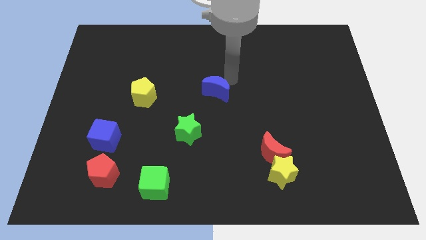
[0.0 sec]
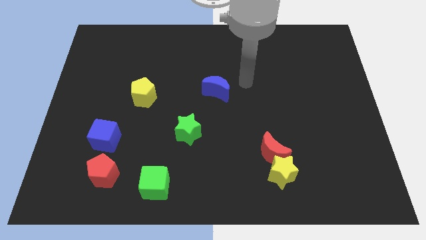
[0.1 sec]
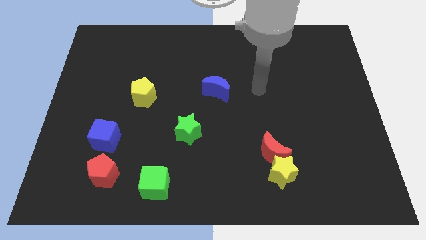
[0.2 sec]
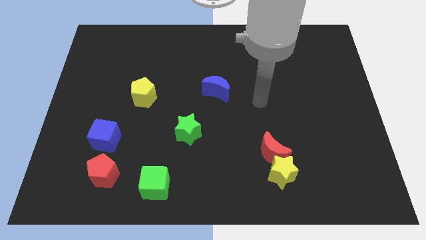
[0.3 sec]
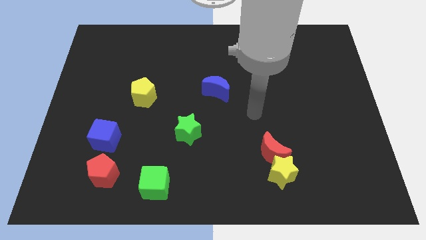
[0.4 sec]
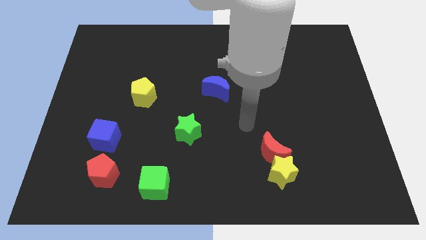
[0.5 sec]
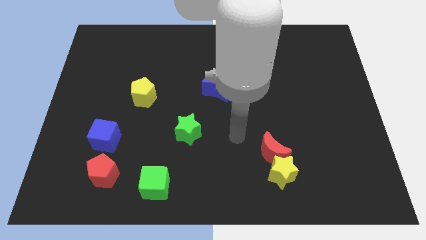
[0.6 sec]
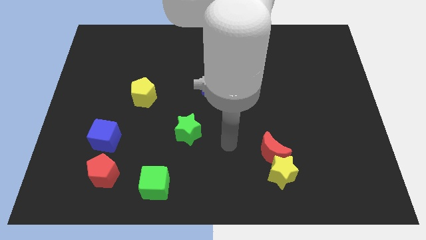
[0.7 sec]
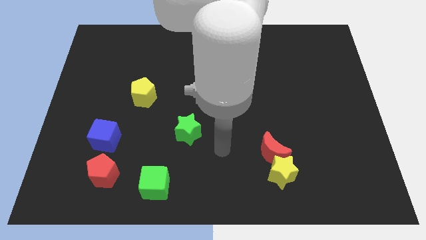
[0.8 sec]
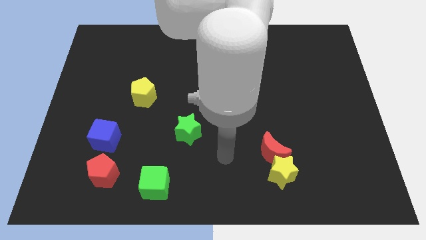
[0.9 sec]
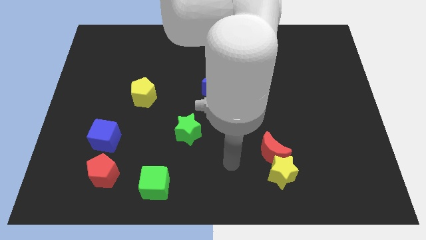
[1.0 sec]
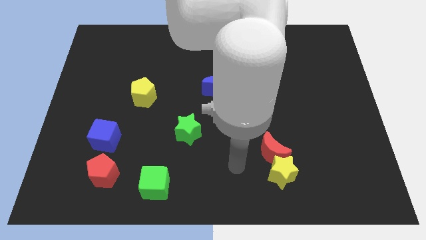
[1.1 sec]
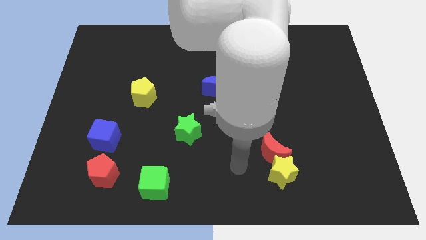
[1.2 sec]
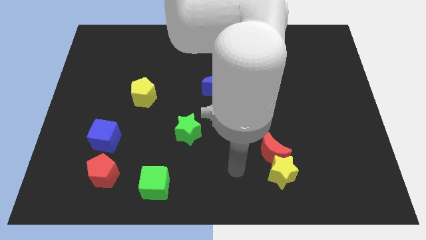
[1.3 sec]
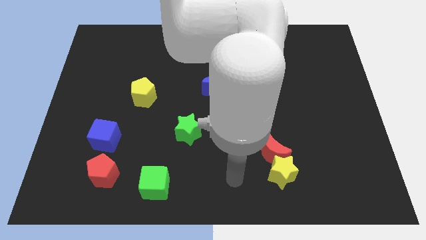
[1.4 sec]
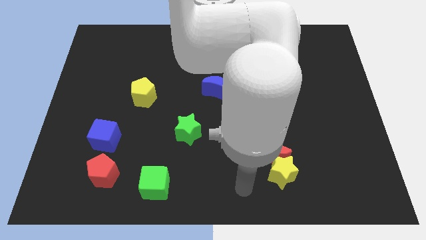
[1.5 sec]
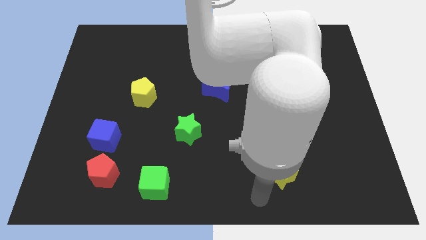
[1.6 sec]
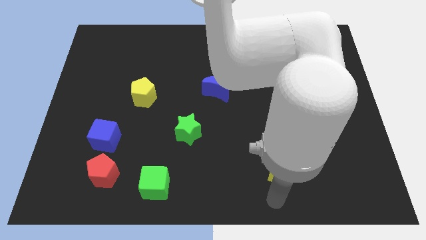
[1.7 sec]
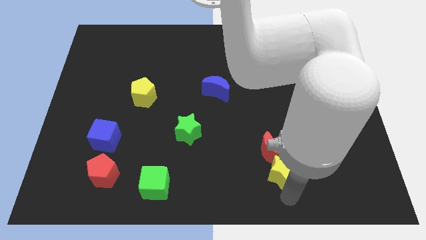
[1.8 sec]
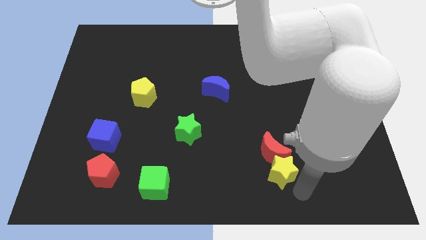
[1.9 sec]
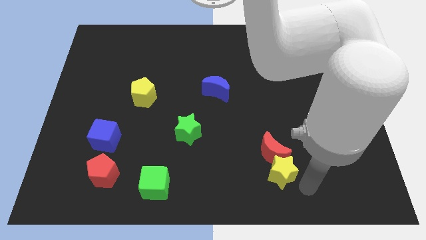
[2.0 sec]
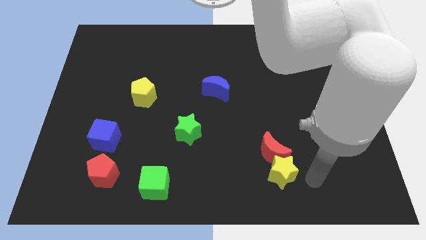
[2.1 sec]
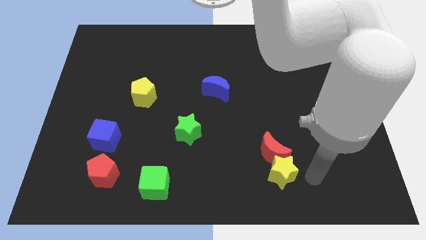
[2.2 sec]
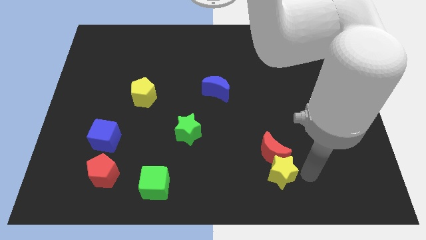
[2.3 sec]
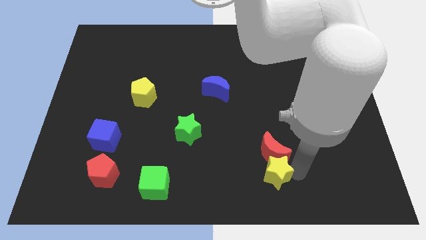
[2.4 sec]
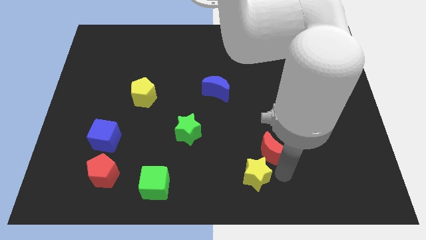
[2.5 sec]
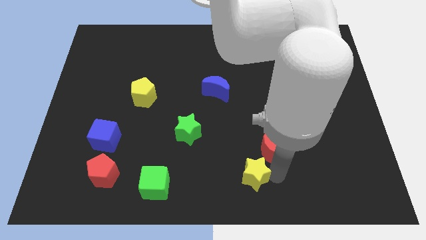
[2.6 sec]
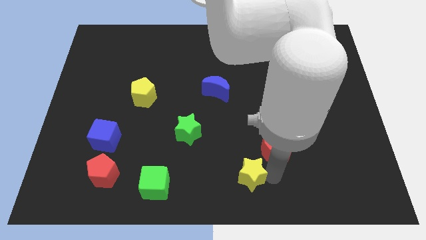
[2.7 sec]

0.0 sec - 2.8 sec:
slide the yellow star to the left slightly

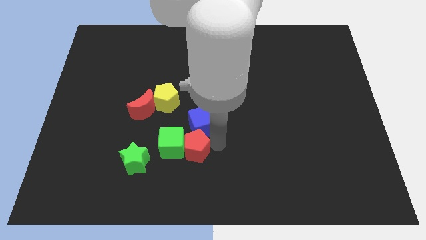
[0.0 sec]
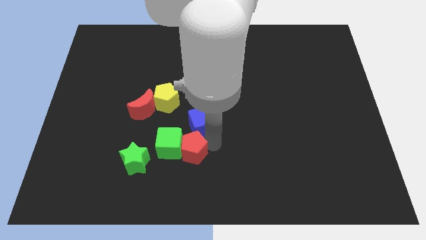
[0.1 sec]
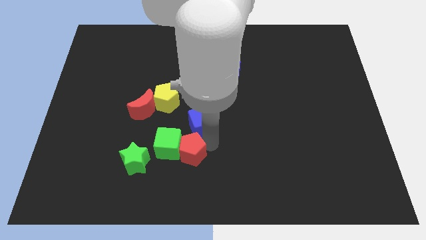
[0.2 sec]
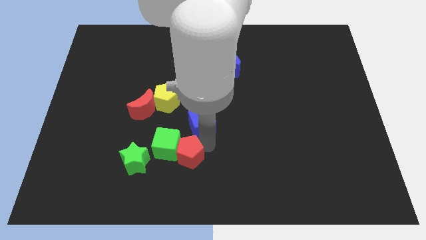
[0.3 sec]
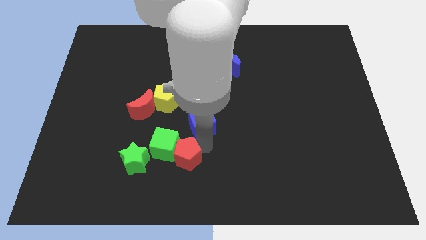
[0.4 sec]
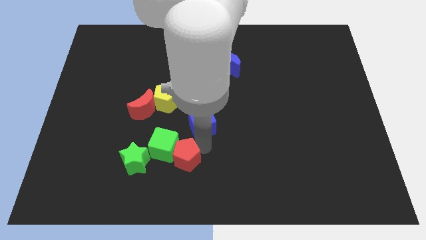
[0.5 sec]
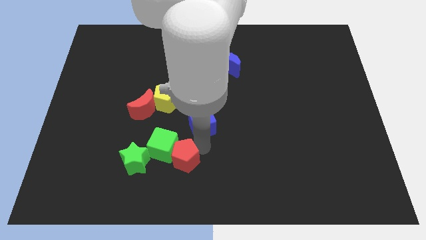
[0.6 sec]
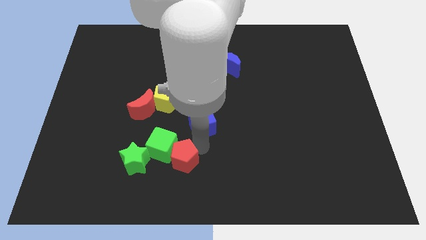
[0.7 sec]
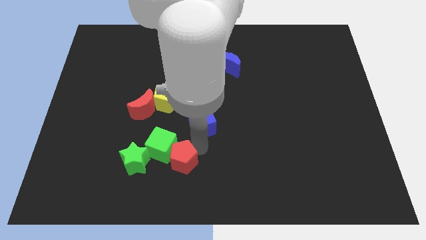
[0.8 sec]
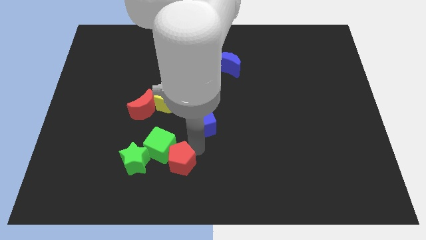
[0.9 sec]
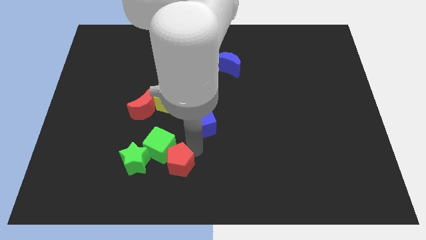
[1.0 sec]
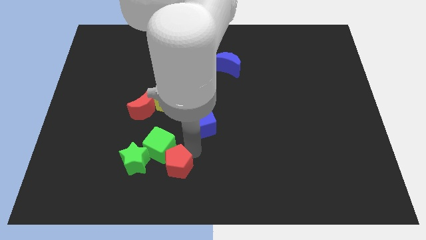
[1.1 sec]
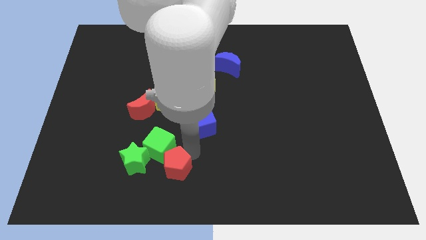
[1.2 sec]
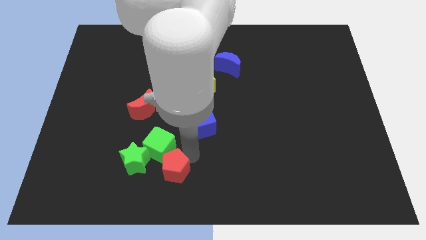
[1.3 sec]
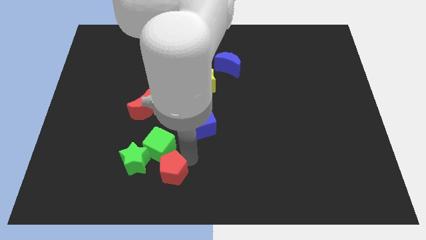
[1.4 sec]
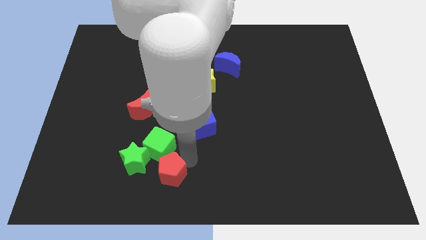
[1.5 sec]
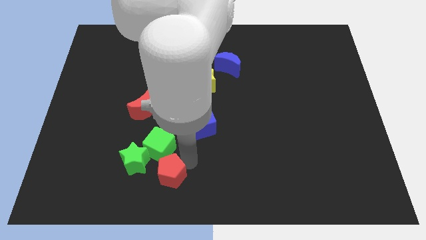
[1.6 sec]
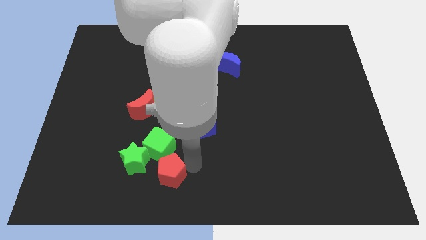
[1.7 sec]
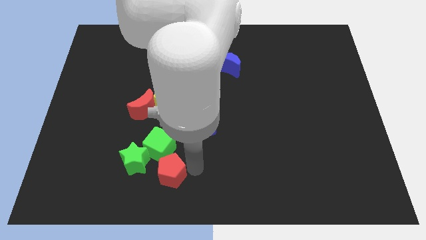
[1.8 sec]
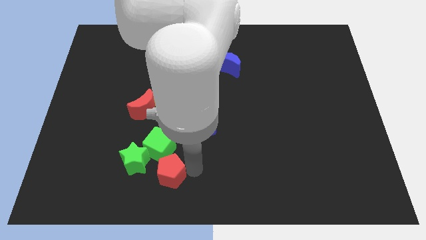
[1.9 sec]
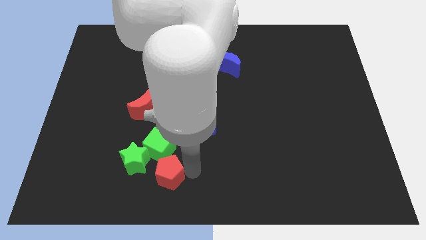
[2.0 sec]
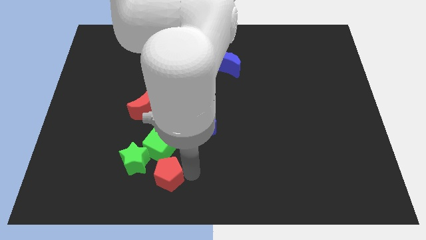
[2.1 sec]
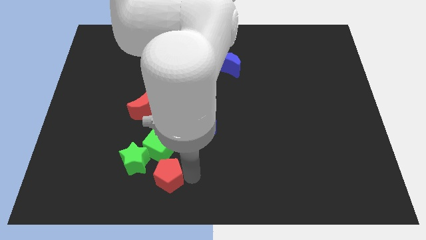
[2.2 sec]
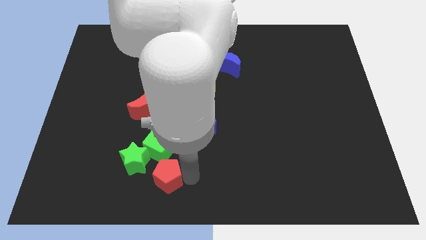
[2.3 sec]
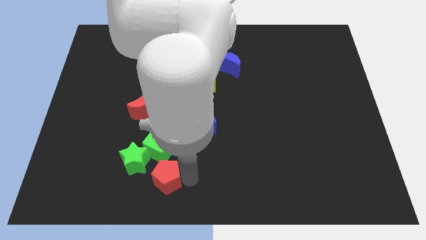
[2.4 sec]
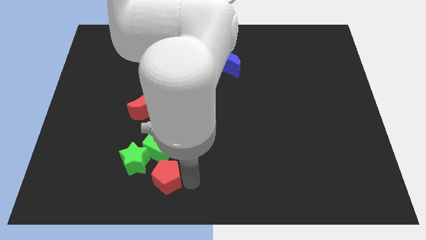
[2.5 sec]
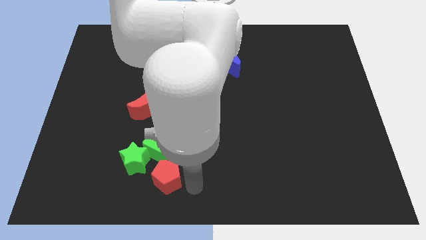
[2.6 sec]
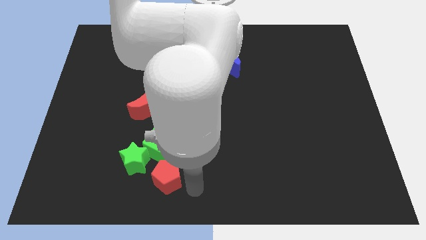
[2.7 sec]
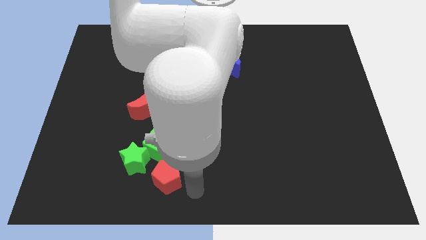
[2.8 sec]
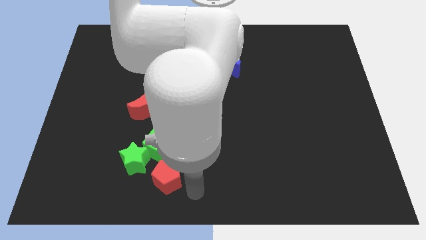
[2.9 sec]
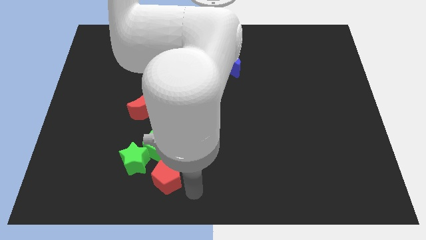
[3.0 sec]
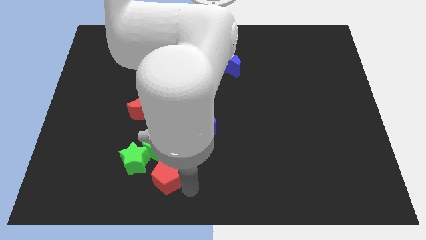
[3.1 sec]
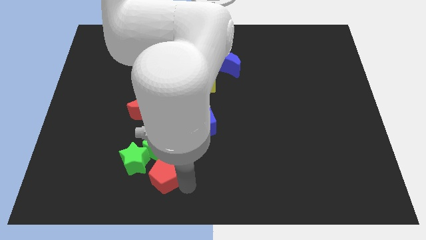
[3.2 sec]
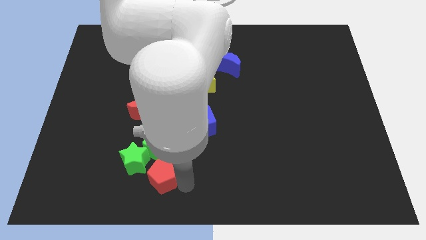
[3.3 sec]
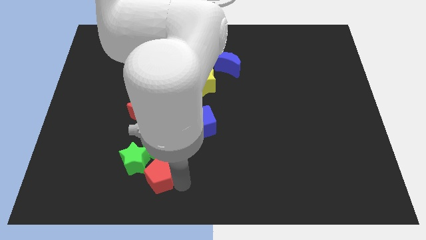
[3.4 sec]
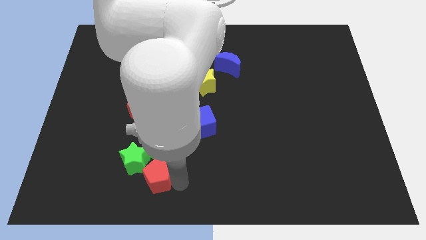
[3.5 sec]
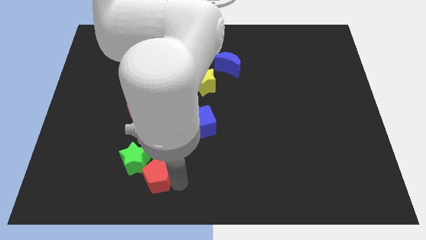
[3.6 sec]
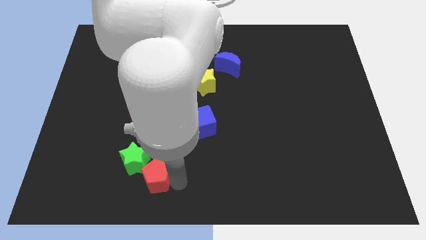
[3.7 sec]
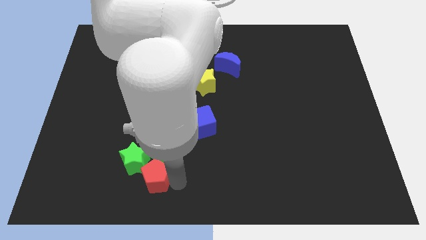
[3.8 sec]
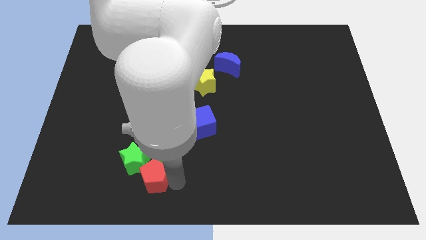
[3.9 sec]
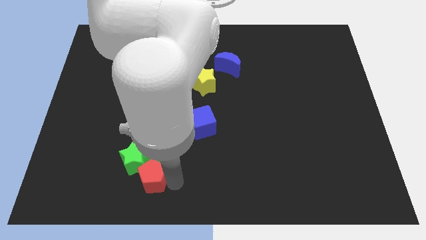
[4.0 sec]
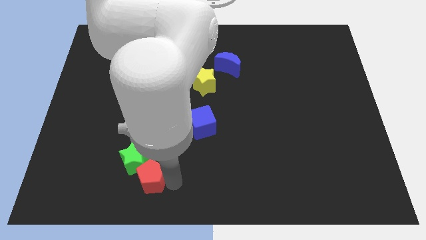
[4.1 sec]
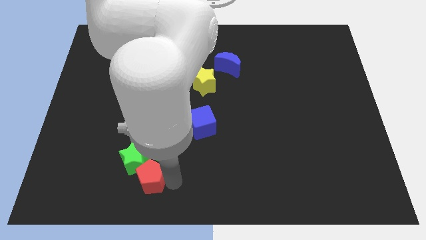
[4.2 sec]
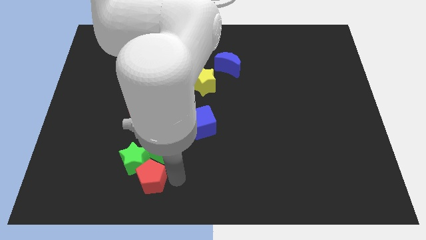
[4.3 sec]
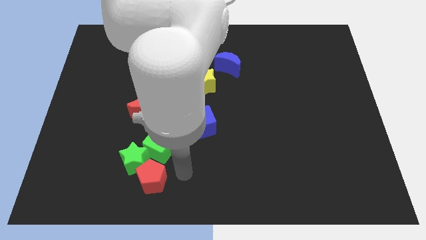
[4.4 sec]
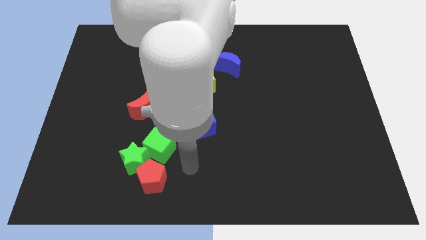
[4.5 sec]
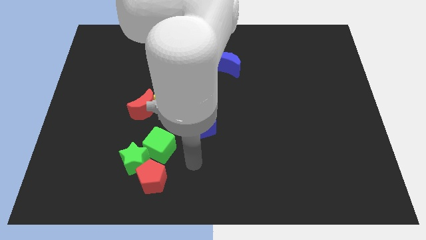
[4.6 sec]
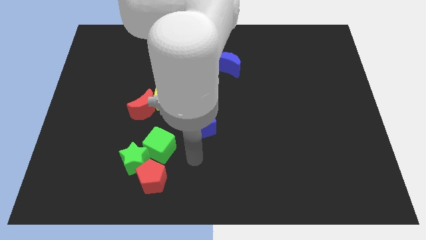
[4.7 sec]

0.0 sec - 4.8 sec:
place the red pentagon below the green star

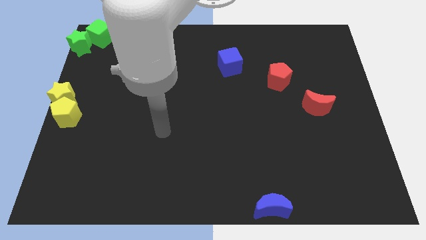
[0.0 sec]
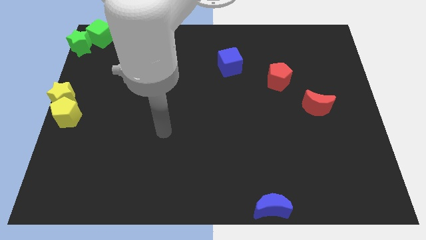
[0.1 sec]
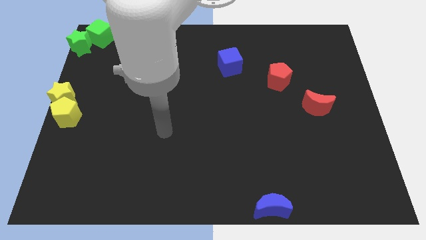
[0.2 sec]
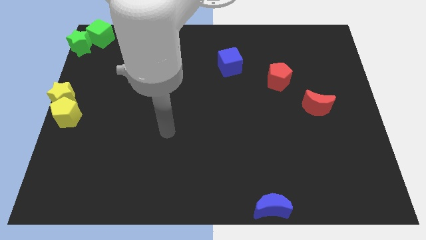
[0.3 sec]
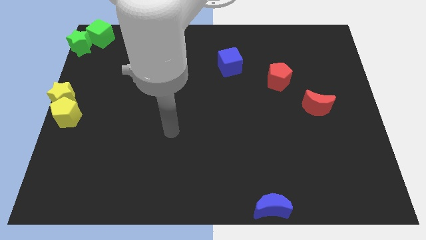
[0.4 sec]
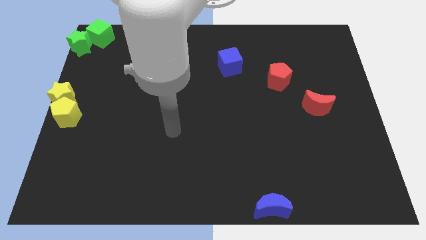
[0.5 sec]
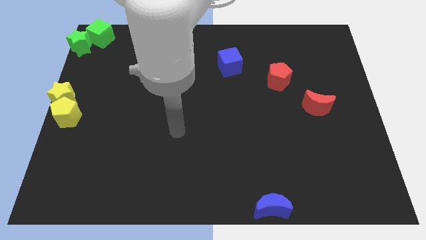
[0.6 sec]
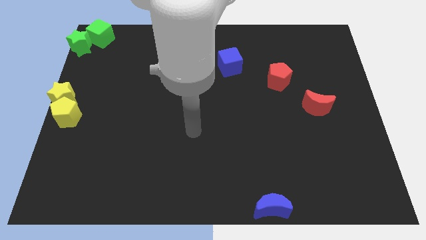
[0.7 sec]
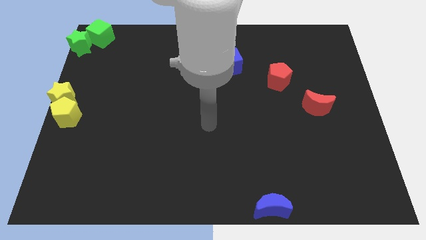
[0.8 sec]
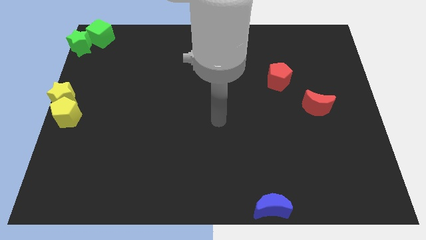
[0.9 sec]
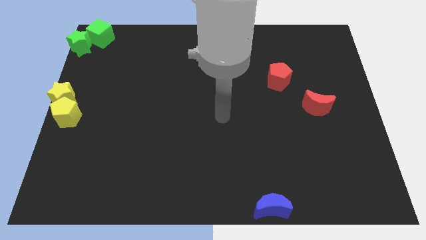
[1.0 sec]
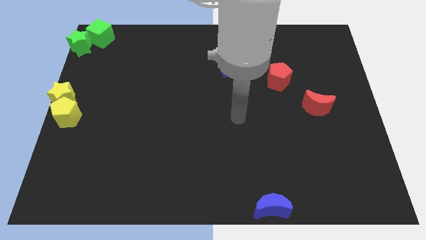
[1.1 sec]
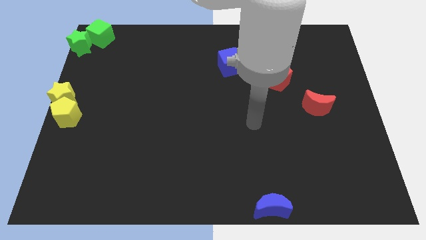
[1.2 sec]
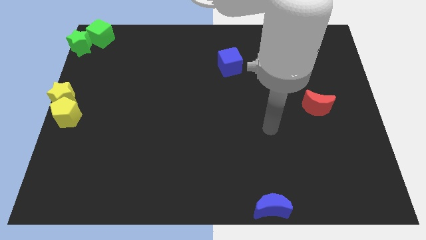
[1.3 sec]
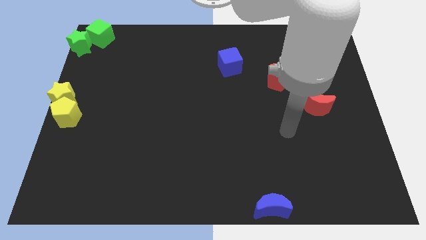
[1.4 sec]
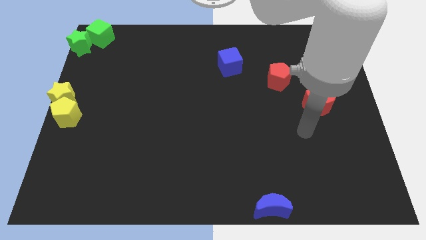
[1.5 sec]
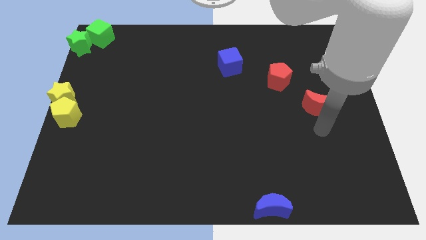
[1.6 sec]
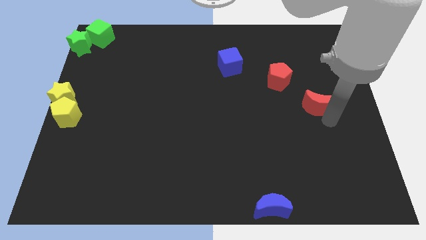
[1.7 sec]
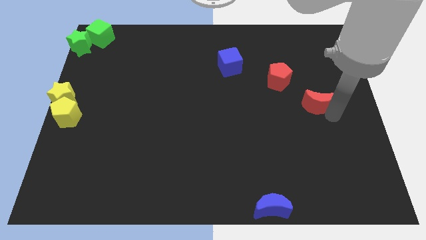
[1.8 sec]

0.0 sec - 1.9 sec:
point your arm at the bottom side of the red moon
